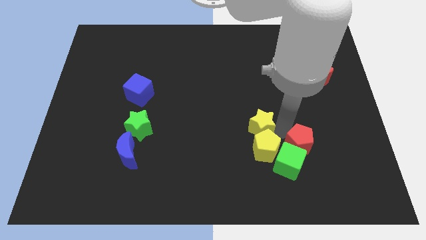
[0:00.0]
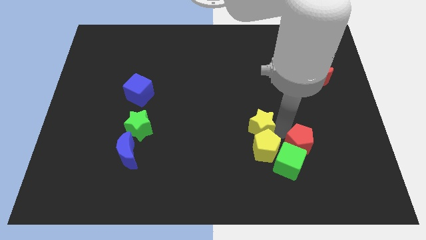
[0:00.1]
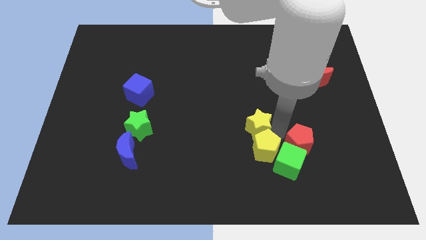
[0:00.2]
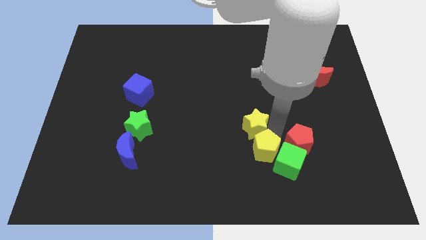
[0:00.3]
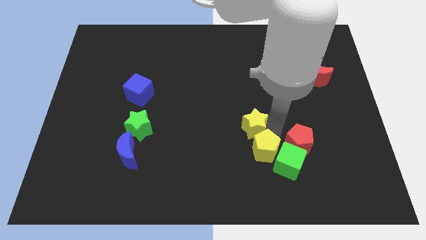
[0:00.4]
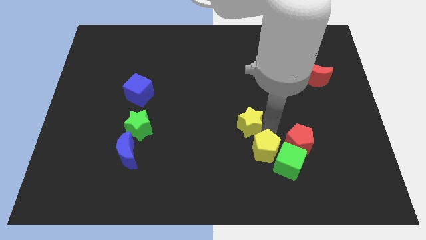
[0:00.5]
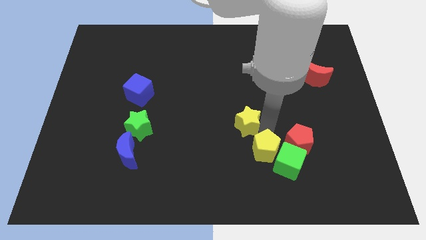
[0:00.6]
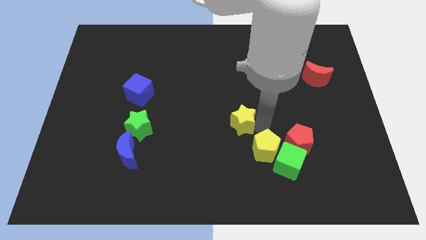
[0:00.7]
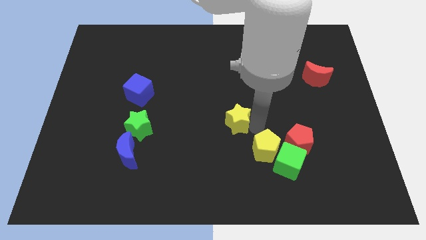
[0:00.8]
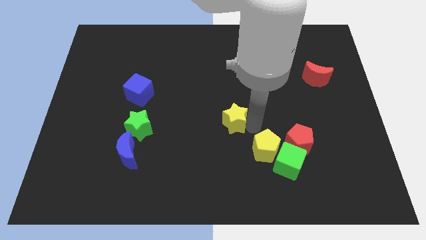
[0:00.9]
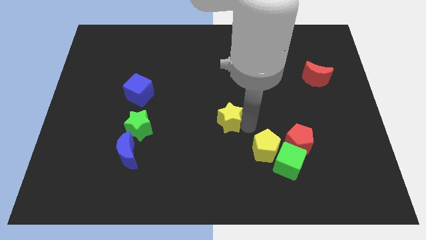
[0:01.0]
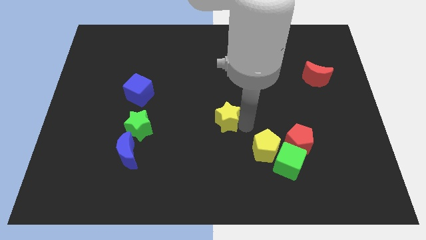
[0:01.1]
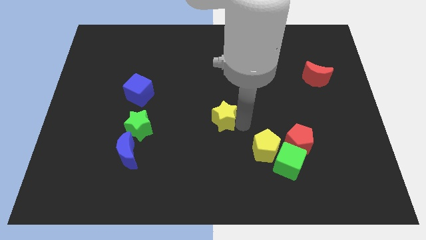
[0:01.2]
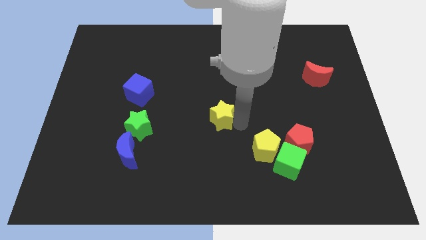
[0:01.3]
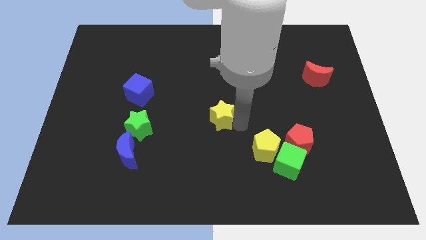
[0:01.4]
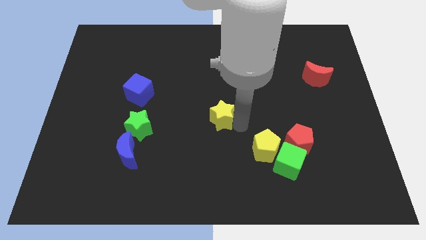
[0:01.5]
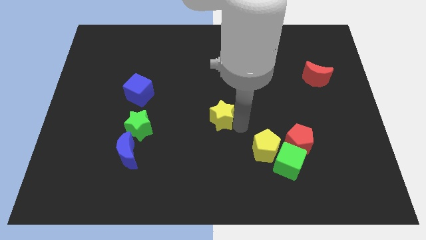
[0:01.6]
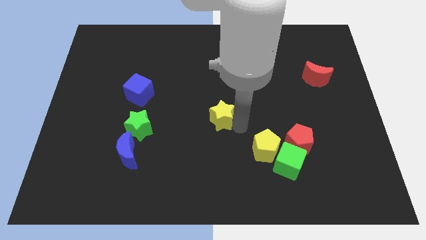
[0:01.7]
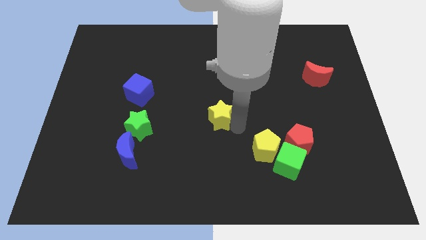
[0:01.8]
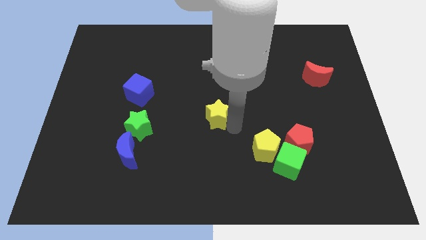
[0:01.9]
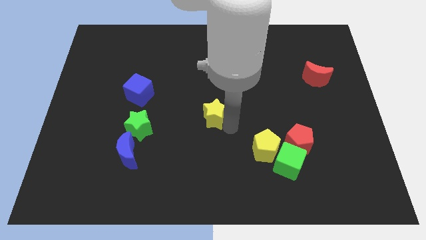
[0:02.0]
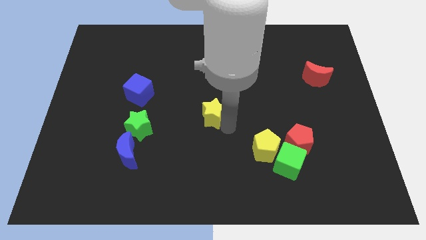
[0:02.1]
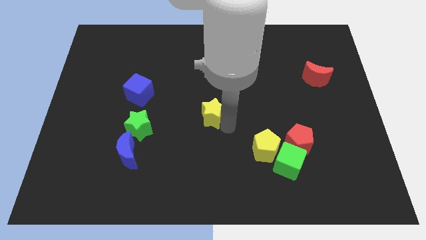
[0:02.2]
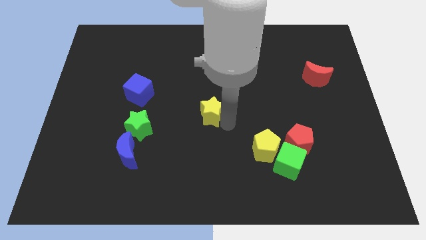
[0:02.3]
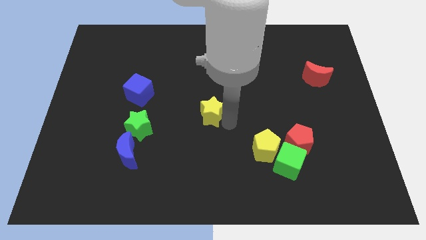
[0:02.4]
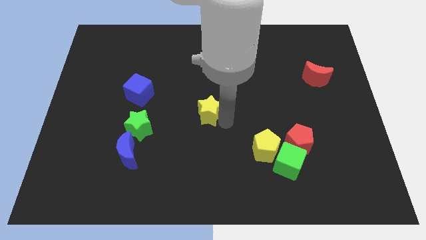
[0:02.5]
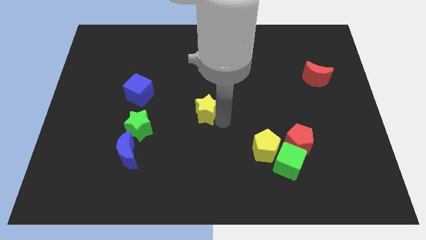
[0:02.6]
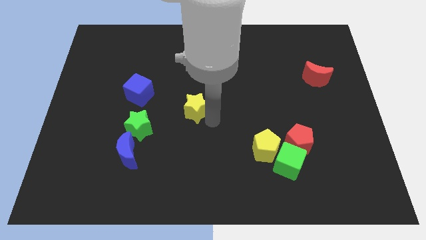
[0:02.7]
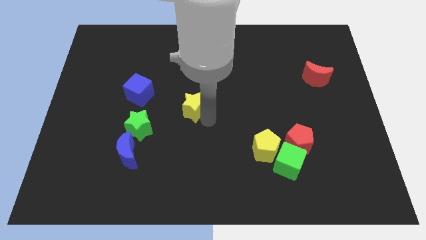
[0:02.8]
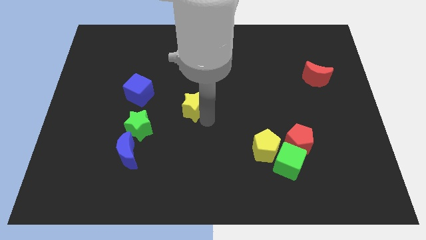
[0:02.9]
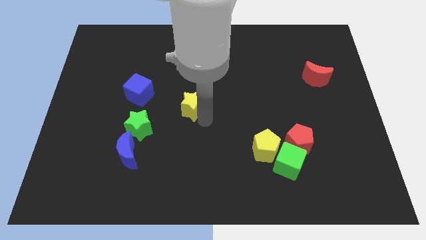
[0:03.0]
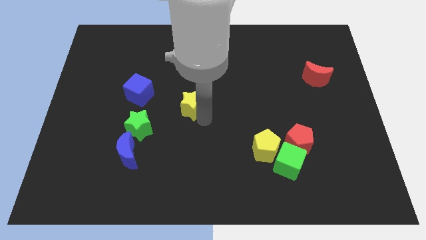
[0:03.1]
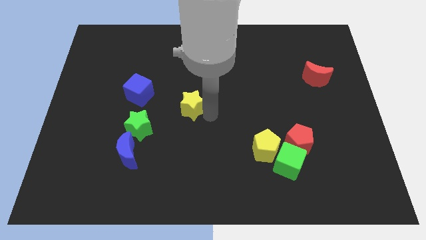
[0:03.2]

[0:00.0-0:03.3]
push the yellow star away from the yellow pentagon

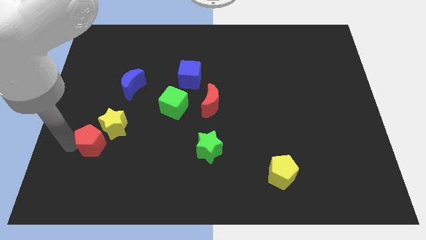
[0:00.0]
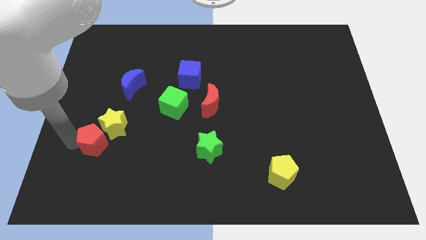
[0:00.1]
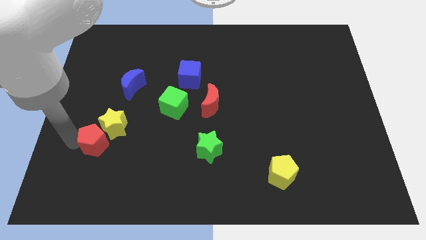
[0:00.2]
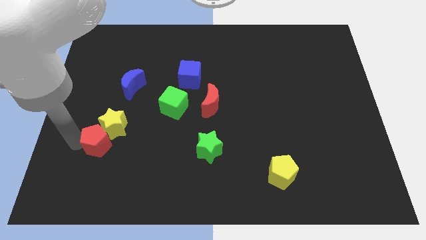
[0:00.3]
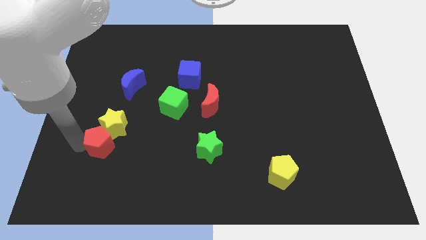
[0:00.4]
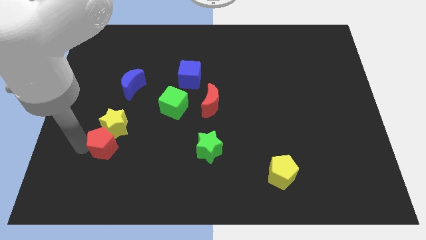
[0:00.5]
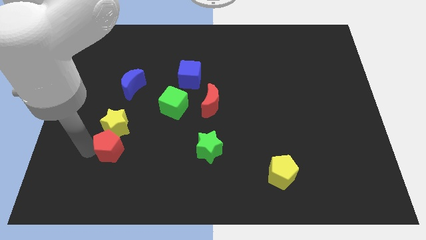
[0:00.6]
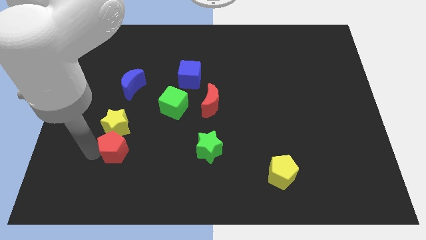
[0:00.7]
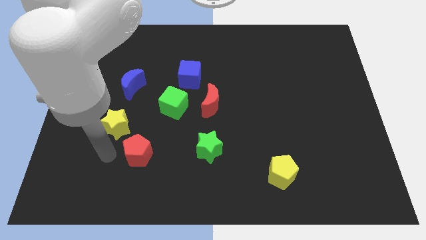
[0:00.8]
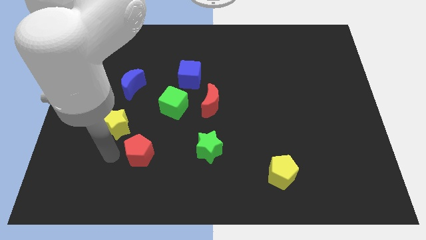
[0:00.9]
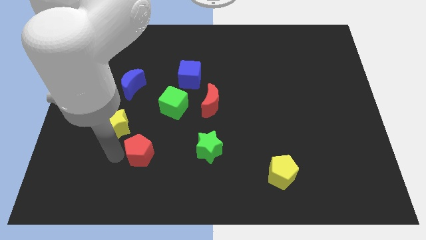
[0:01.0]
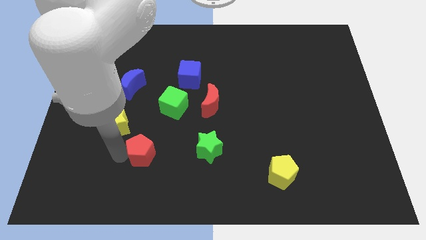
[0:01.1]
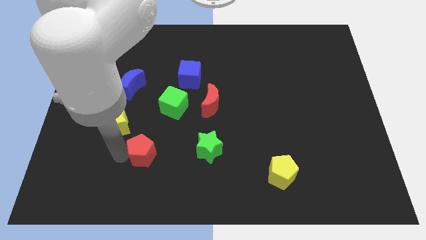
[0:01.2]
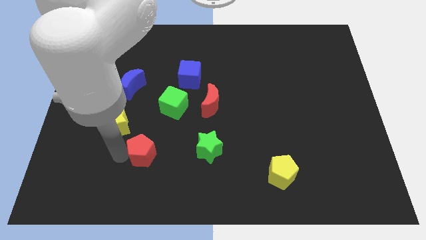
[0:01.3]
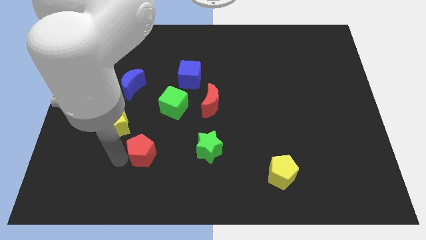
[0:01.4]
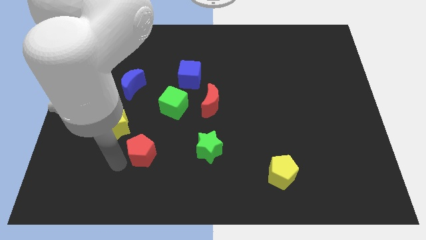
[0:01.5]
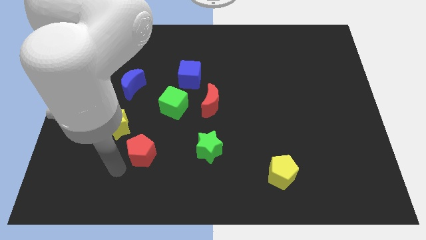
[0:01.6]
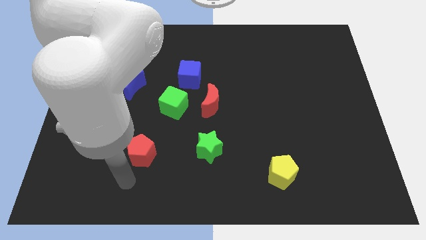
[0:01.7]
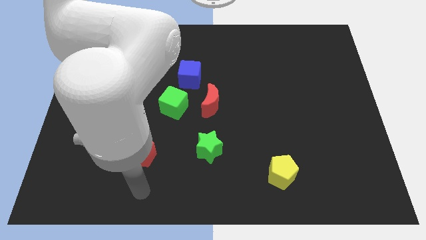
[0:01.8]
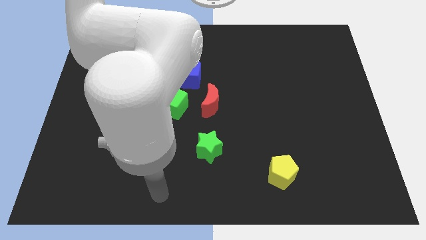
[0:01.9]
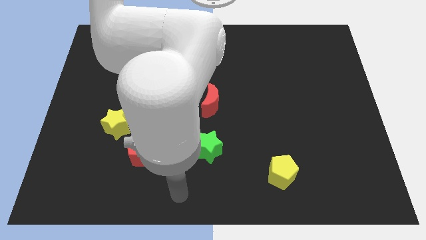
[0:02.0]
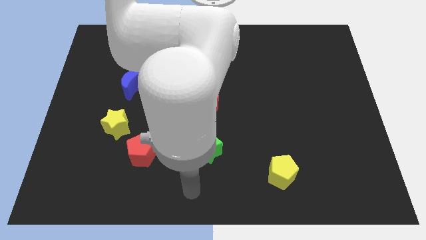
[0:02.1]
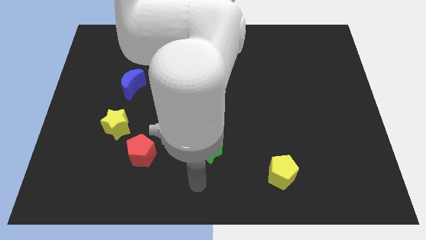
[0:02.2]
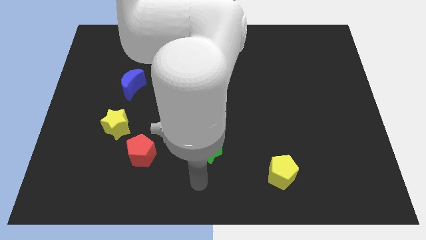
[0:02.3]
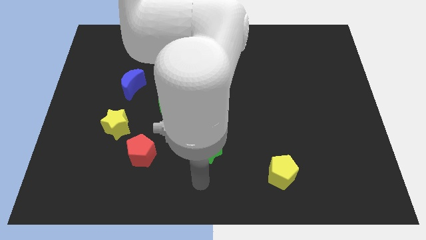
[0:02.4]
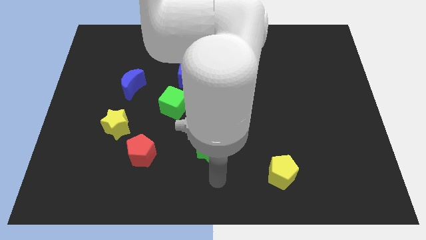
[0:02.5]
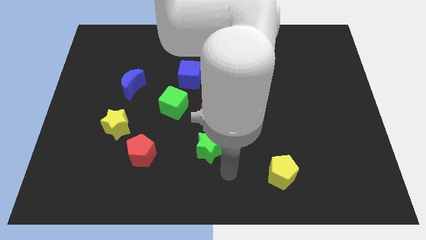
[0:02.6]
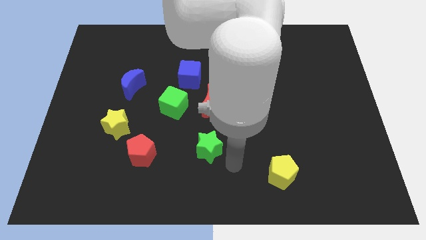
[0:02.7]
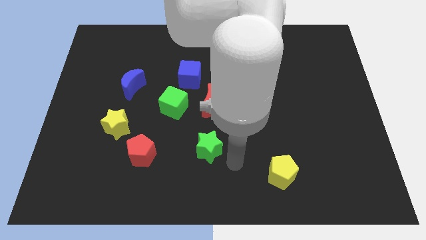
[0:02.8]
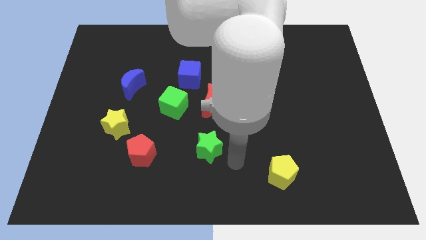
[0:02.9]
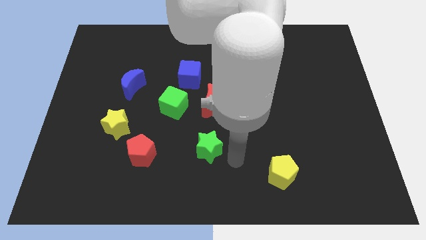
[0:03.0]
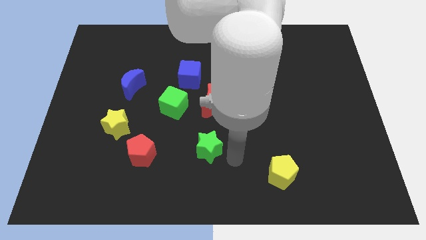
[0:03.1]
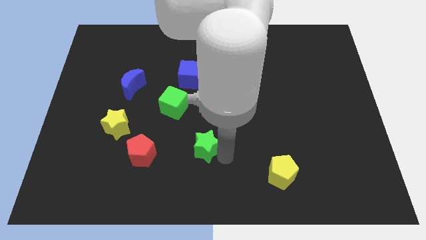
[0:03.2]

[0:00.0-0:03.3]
move the red pentagon towards the left of the green star

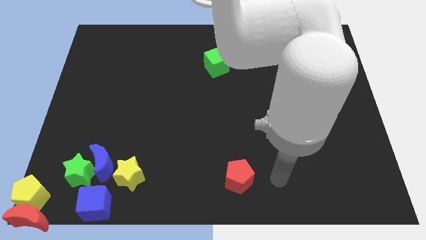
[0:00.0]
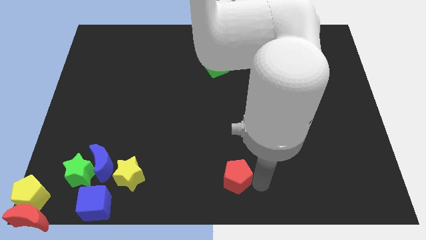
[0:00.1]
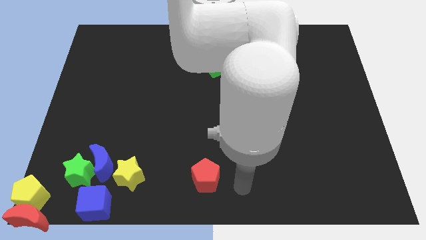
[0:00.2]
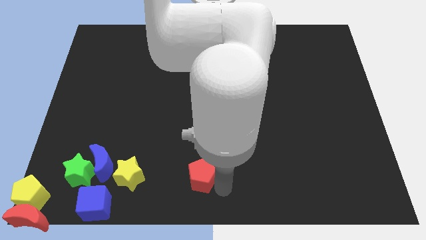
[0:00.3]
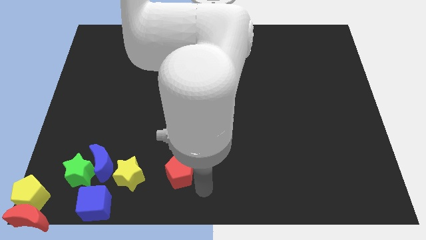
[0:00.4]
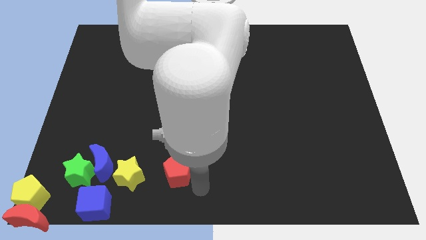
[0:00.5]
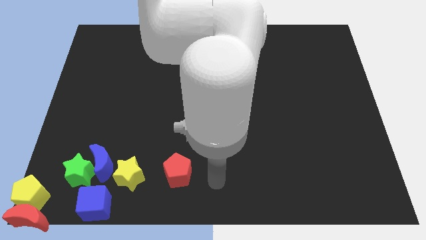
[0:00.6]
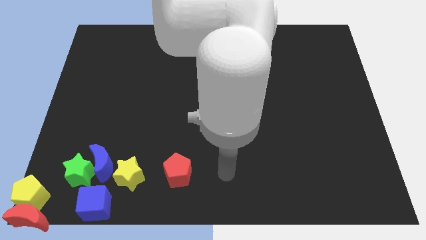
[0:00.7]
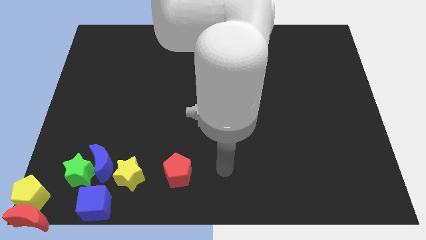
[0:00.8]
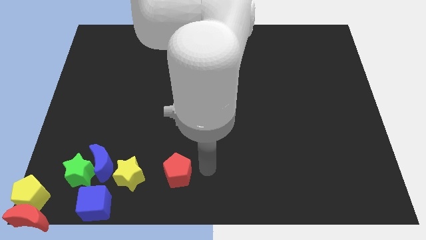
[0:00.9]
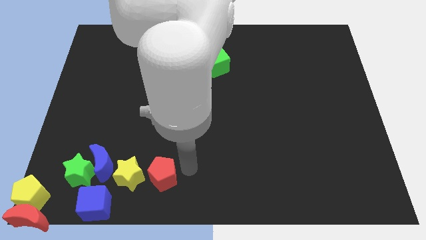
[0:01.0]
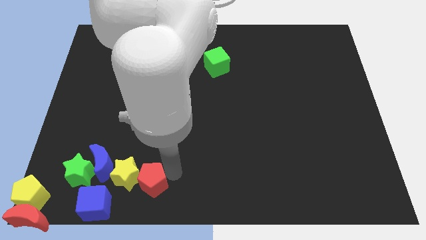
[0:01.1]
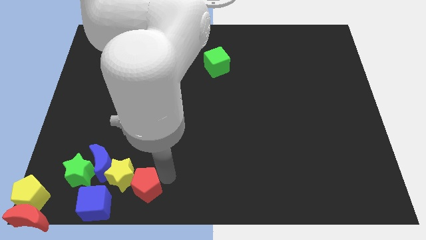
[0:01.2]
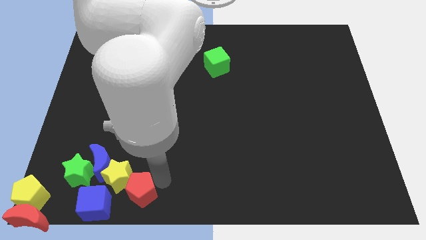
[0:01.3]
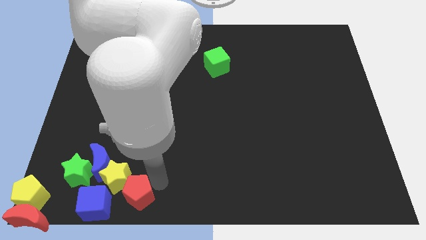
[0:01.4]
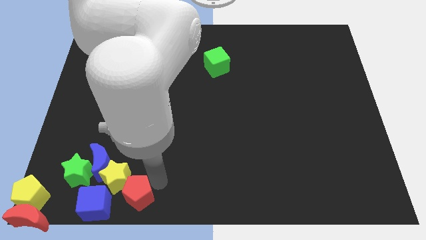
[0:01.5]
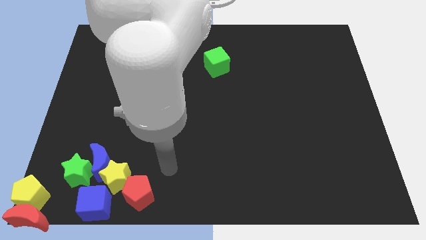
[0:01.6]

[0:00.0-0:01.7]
push the red pentagon to the bottom right side of the yellow star

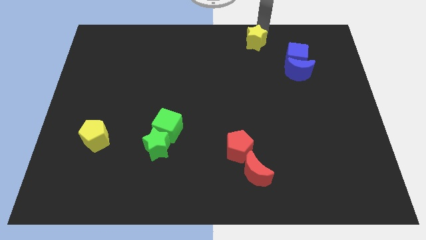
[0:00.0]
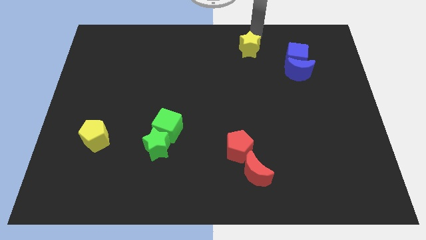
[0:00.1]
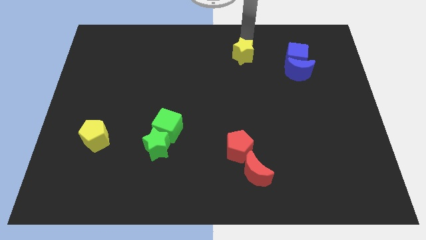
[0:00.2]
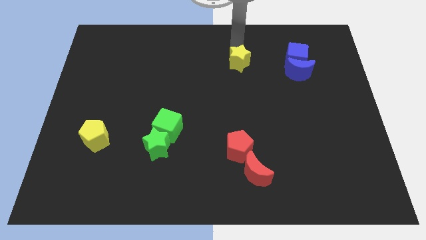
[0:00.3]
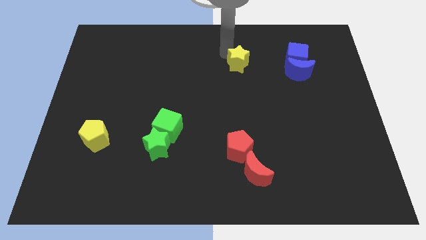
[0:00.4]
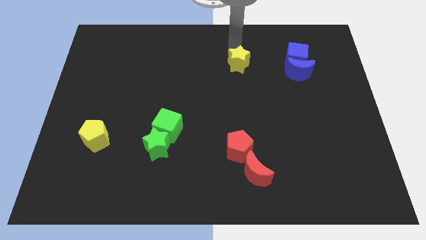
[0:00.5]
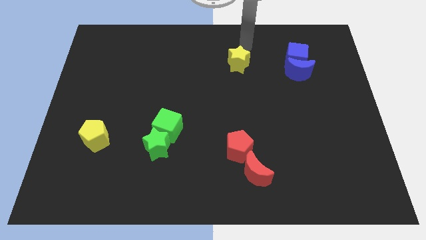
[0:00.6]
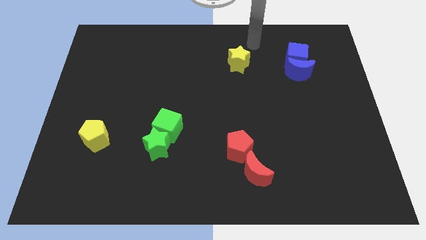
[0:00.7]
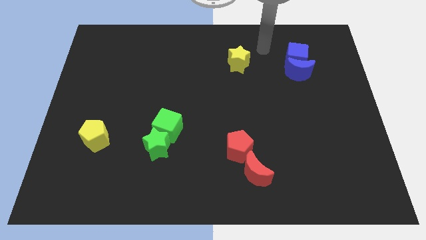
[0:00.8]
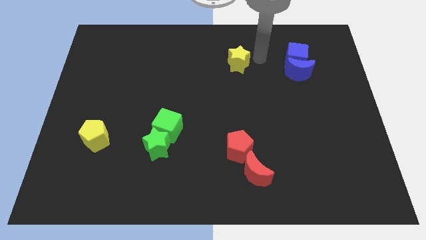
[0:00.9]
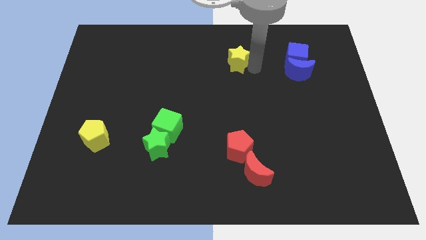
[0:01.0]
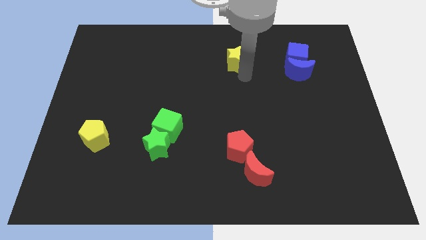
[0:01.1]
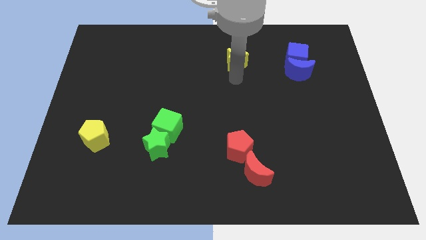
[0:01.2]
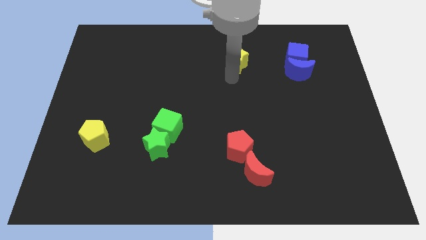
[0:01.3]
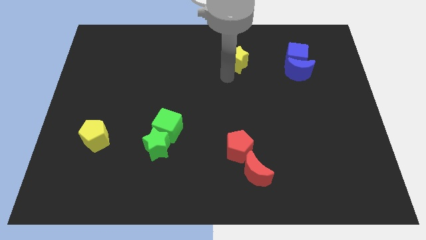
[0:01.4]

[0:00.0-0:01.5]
push the yellow star to the center
